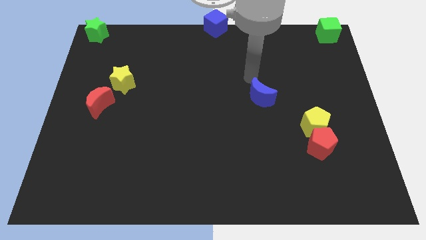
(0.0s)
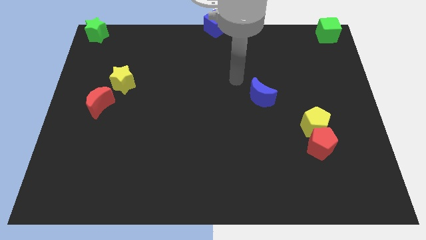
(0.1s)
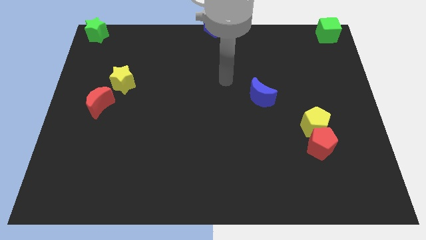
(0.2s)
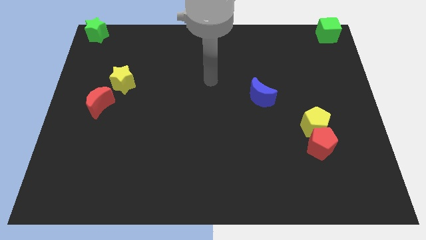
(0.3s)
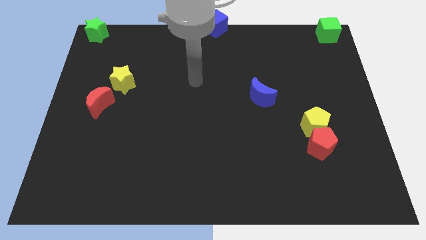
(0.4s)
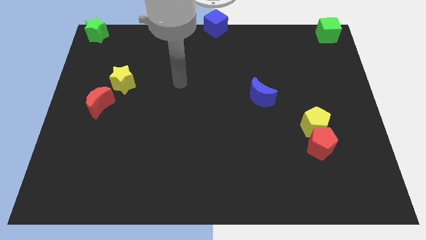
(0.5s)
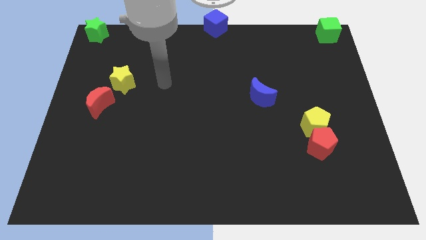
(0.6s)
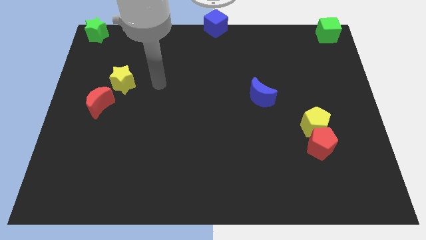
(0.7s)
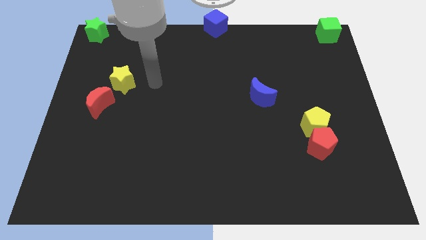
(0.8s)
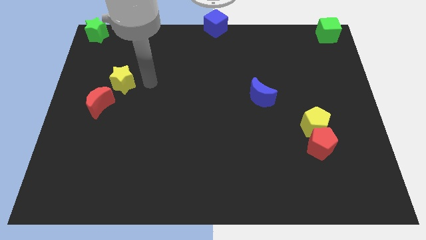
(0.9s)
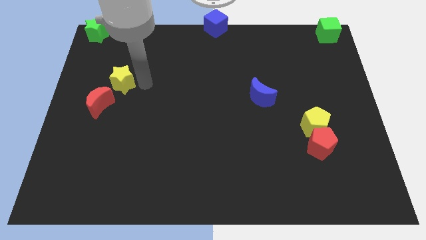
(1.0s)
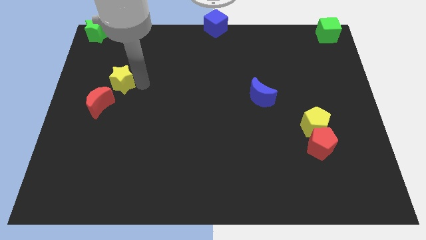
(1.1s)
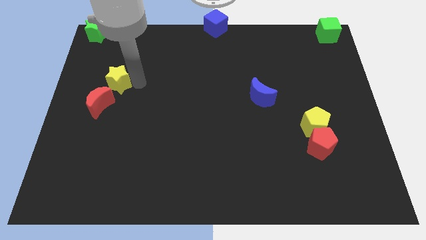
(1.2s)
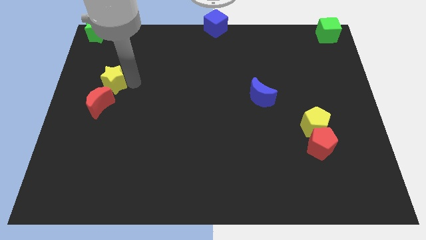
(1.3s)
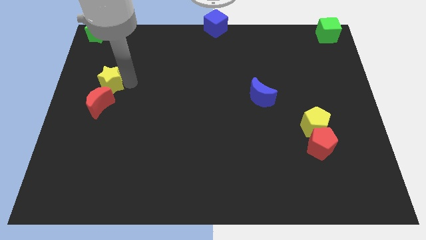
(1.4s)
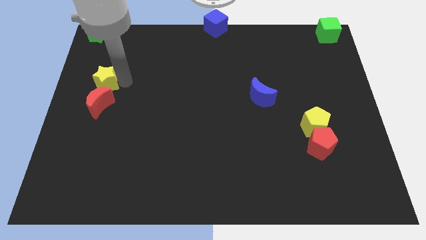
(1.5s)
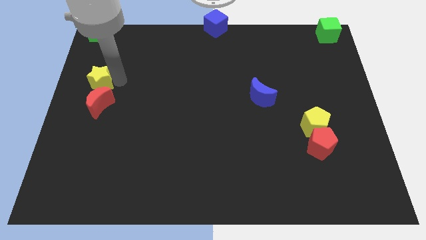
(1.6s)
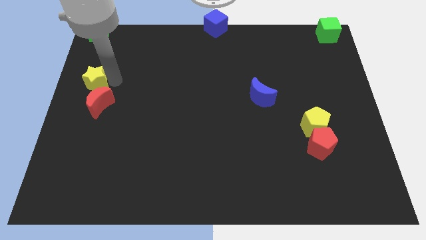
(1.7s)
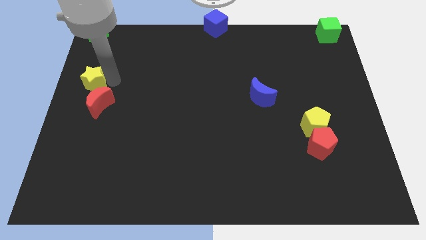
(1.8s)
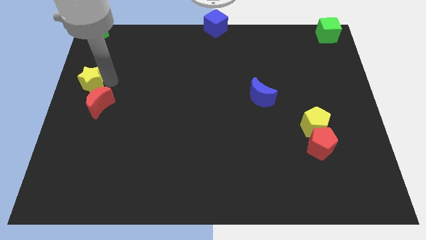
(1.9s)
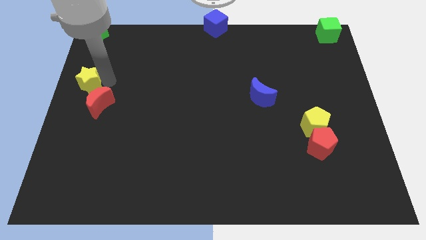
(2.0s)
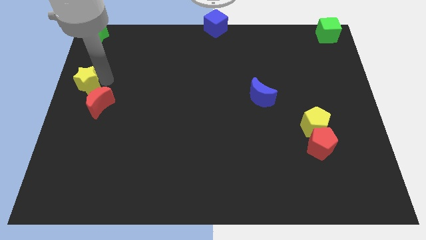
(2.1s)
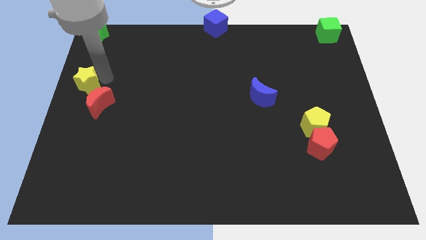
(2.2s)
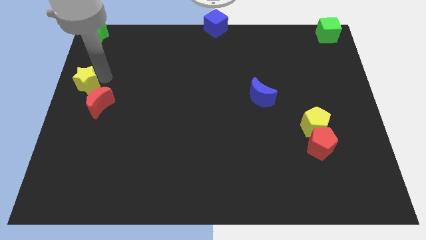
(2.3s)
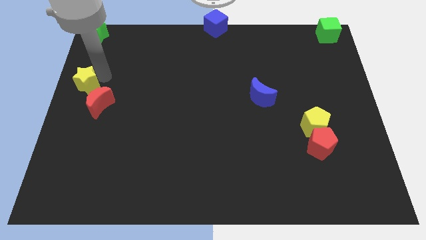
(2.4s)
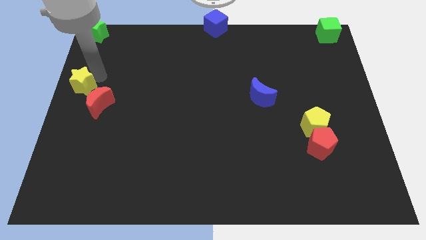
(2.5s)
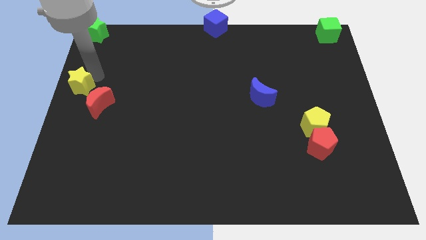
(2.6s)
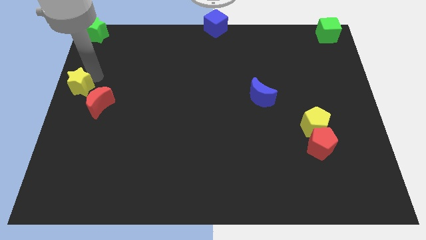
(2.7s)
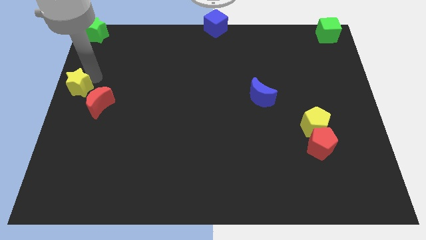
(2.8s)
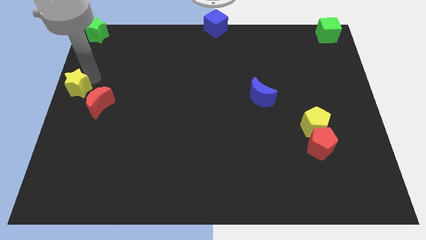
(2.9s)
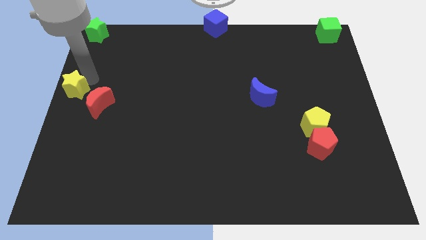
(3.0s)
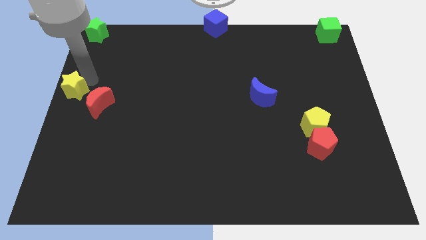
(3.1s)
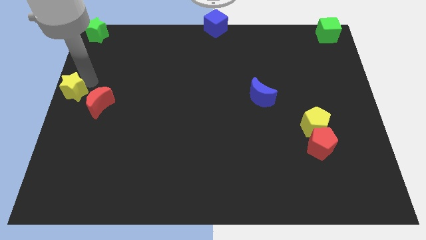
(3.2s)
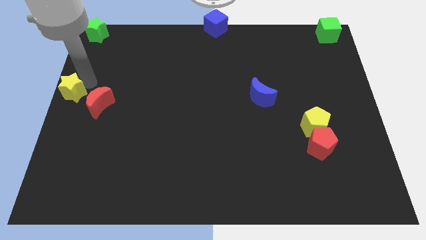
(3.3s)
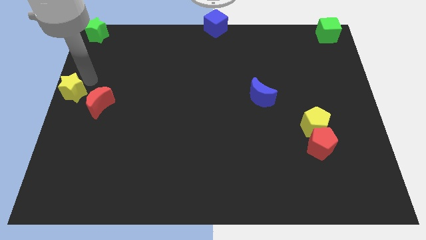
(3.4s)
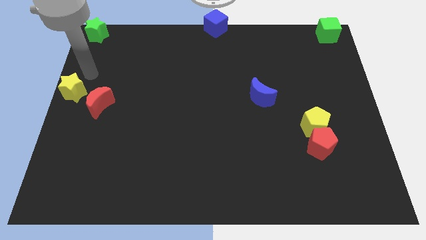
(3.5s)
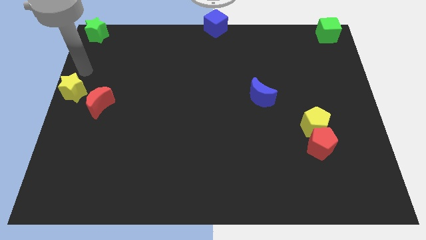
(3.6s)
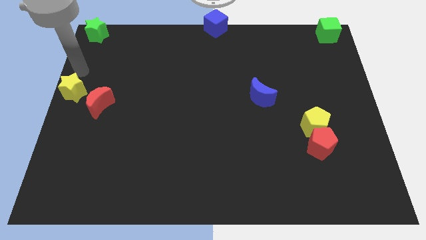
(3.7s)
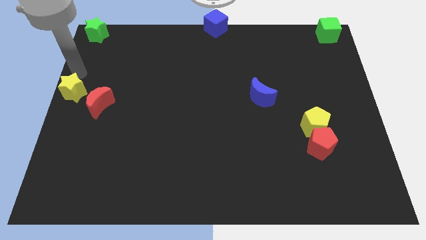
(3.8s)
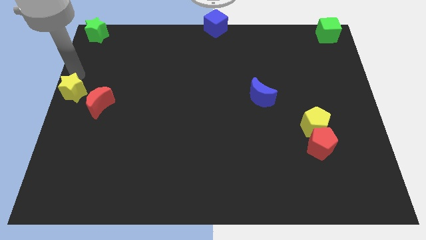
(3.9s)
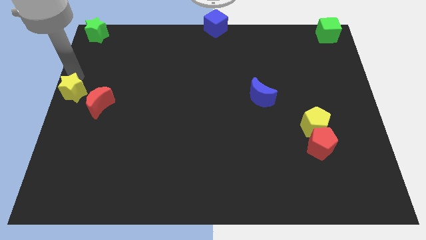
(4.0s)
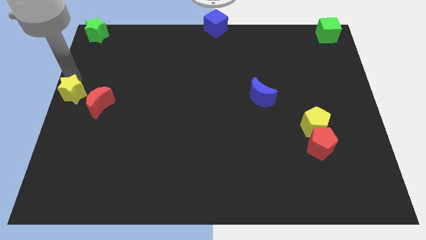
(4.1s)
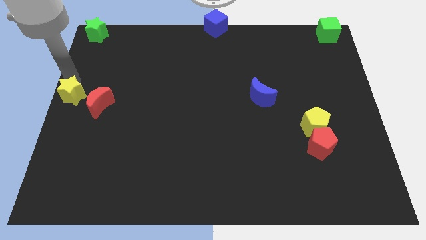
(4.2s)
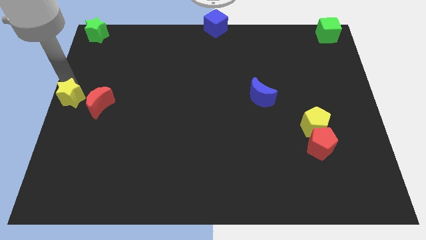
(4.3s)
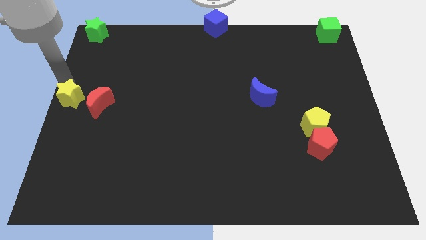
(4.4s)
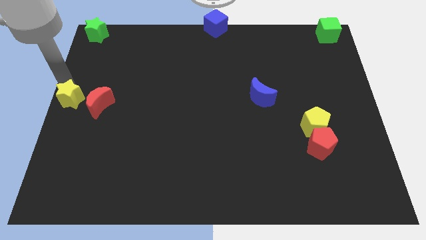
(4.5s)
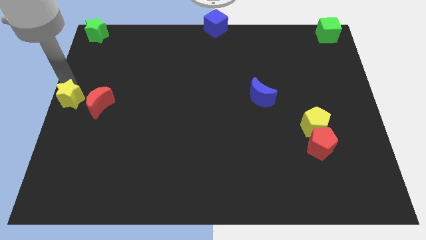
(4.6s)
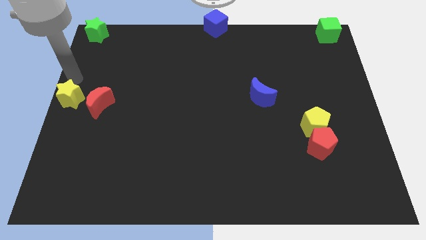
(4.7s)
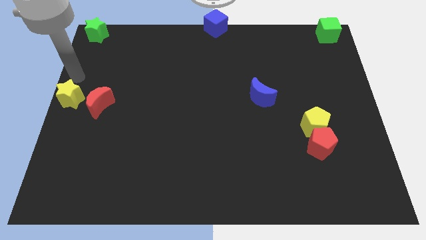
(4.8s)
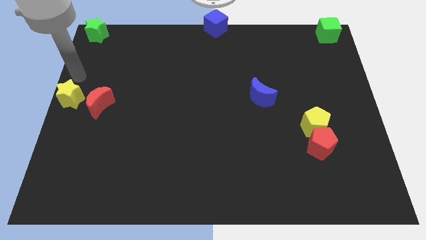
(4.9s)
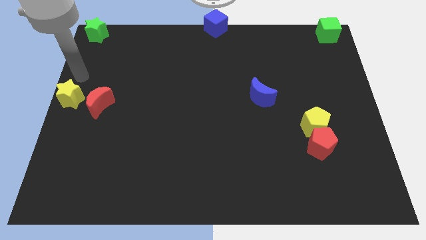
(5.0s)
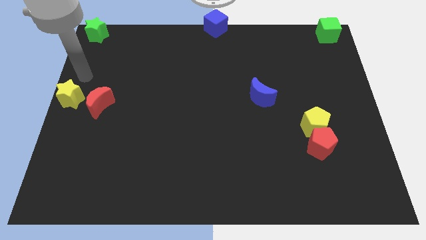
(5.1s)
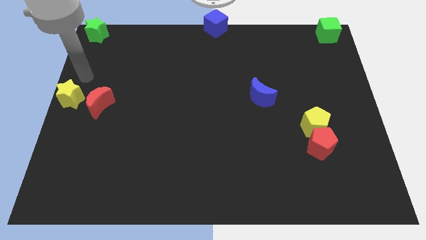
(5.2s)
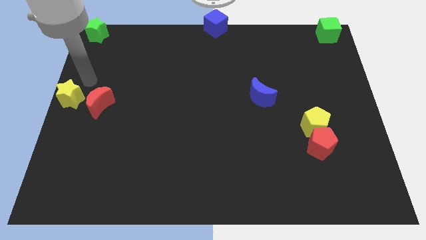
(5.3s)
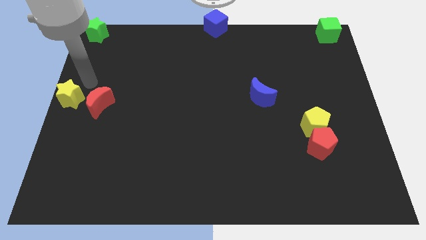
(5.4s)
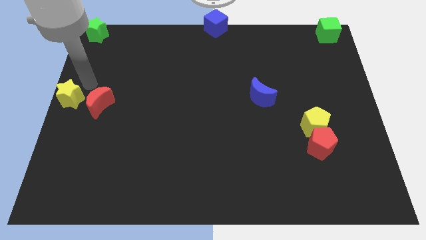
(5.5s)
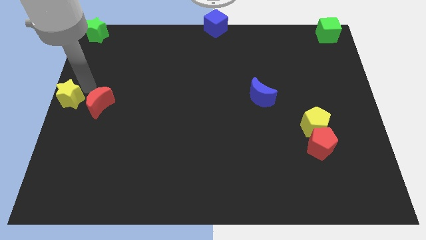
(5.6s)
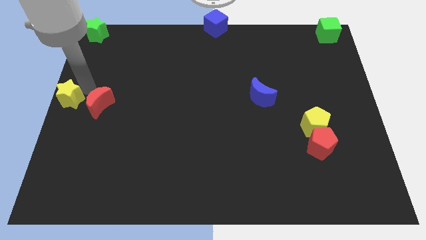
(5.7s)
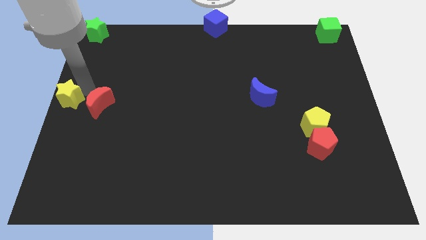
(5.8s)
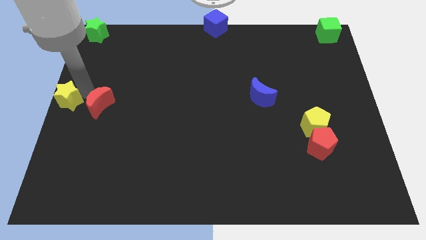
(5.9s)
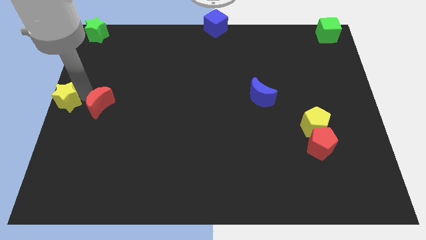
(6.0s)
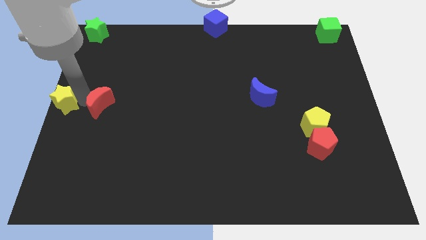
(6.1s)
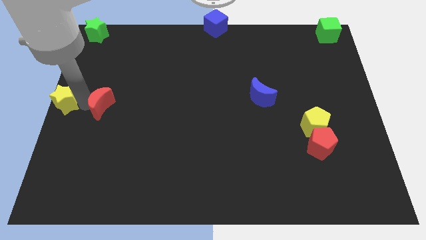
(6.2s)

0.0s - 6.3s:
place the yellow star to the center left of the board

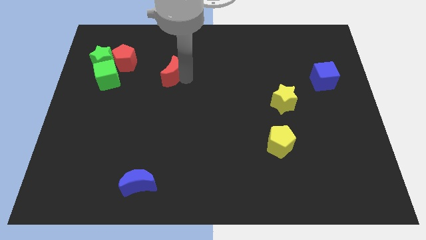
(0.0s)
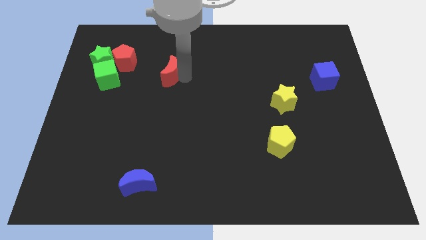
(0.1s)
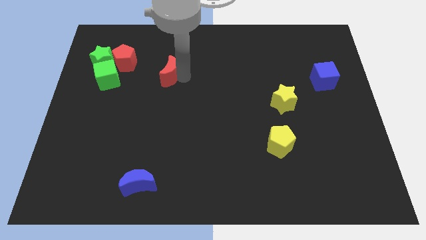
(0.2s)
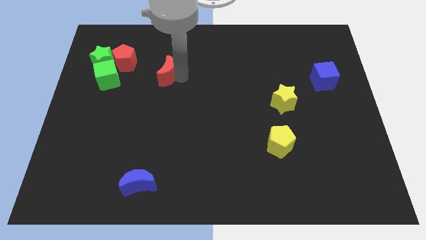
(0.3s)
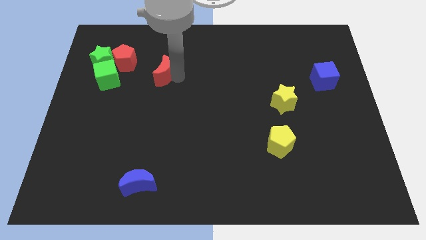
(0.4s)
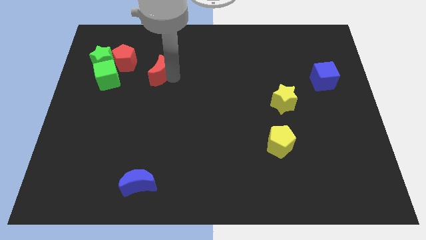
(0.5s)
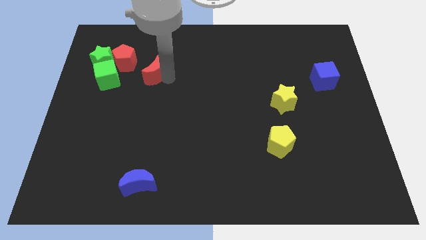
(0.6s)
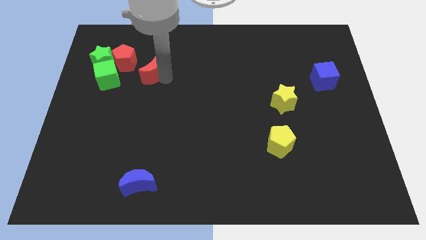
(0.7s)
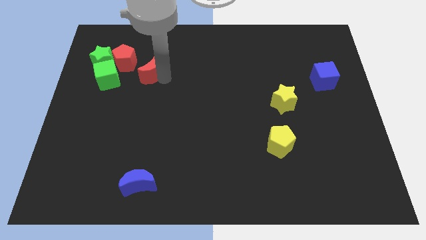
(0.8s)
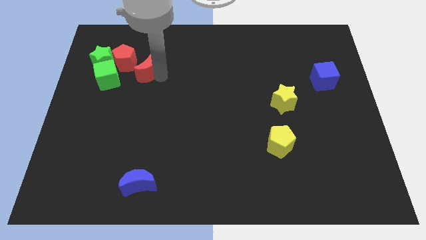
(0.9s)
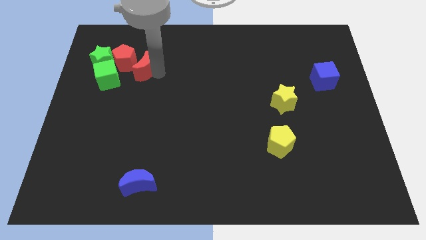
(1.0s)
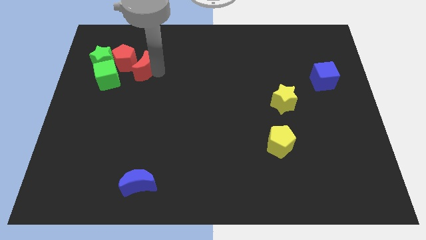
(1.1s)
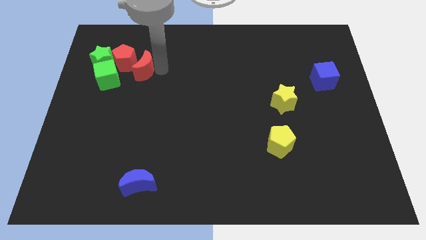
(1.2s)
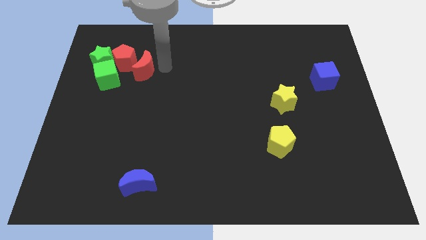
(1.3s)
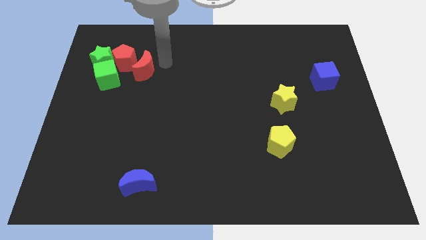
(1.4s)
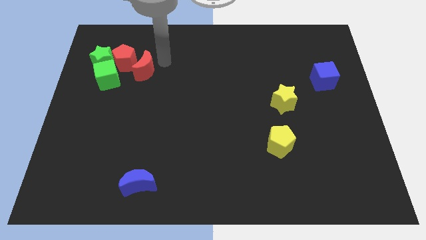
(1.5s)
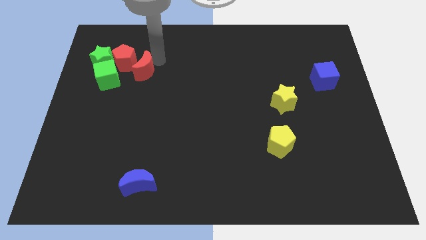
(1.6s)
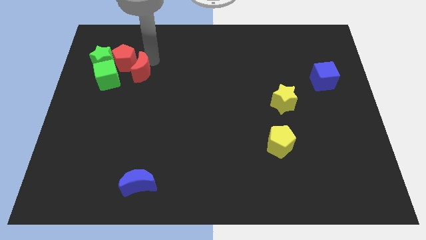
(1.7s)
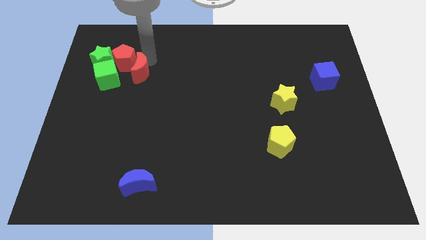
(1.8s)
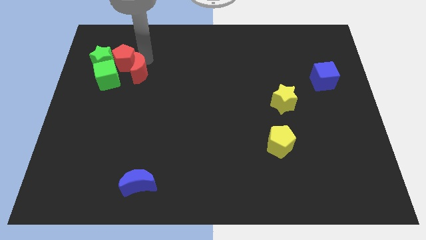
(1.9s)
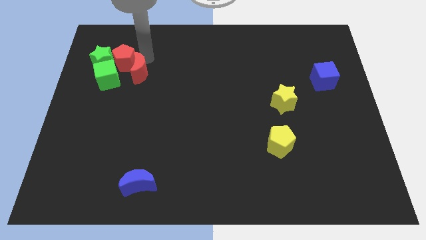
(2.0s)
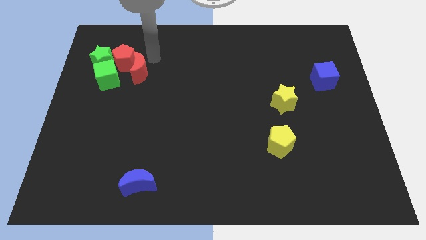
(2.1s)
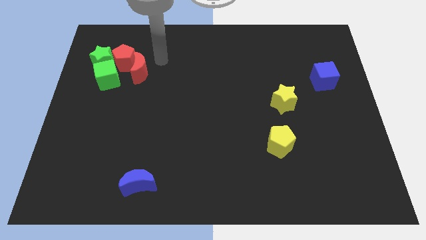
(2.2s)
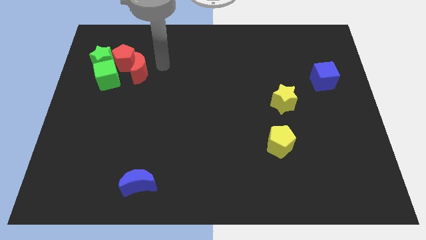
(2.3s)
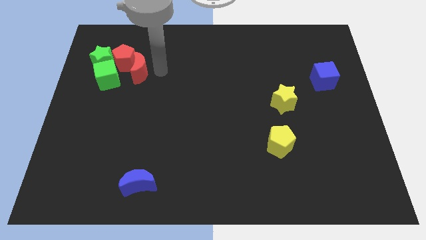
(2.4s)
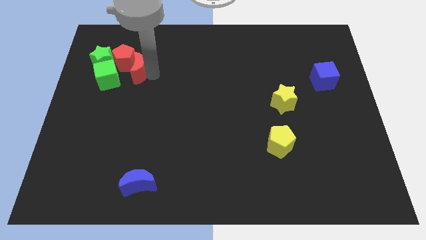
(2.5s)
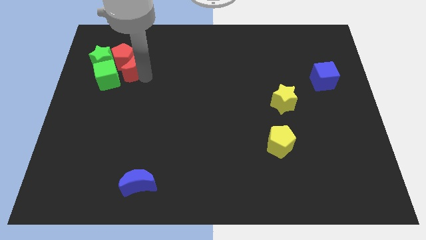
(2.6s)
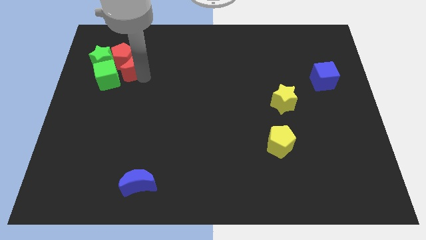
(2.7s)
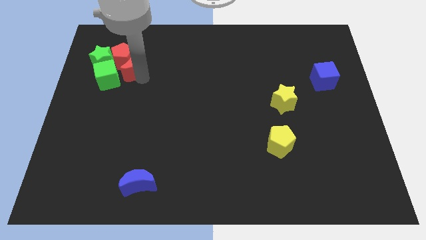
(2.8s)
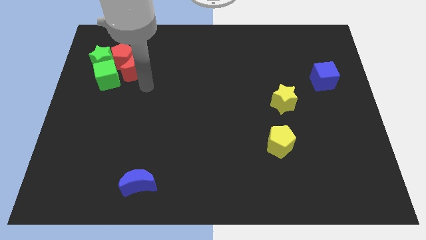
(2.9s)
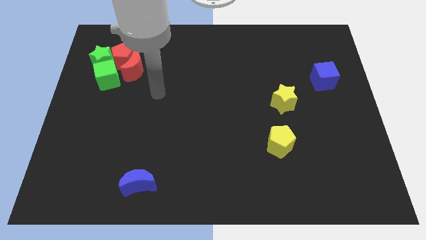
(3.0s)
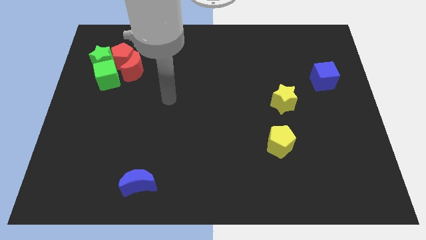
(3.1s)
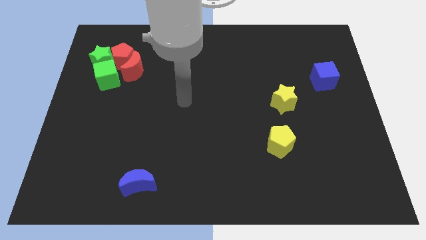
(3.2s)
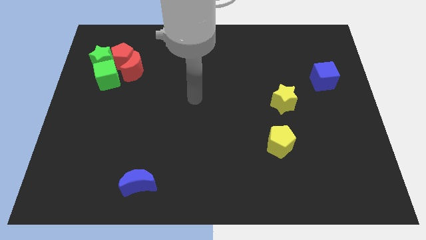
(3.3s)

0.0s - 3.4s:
push the red crescent into the red pentagon
